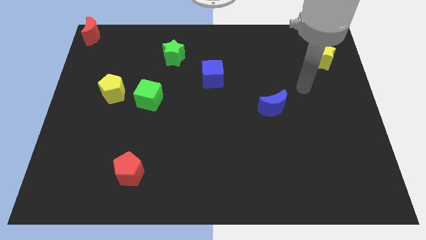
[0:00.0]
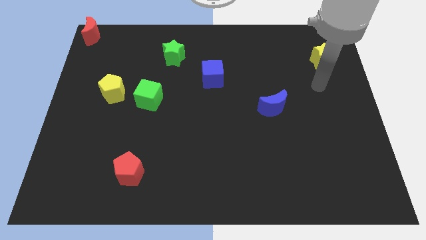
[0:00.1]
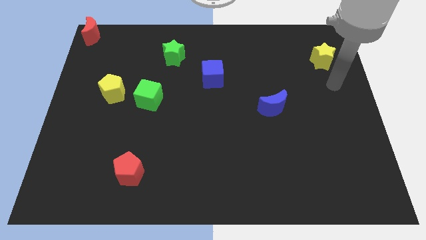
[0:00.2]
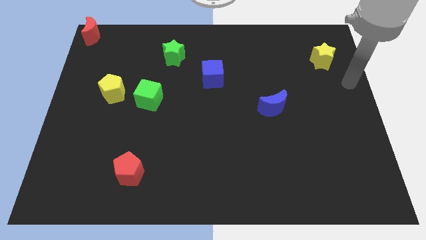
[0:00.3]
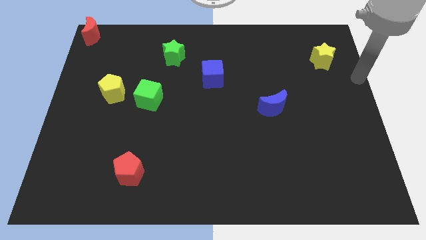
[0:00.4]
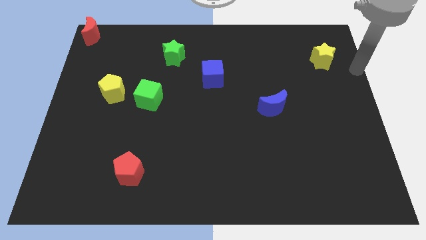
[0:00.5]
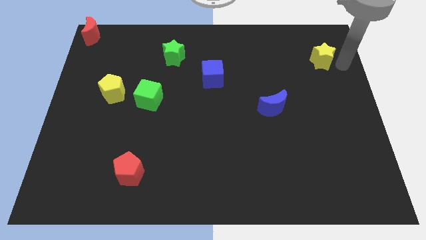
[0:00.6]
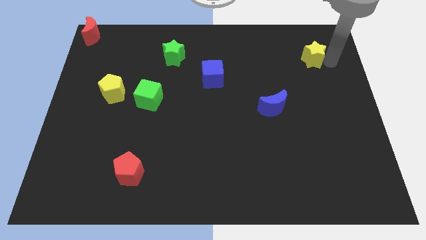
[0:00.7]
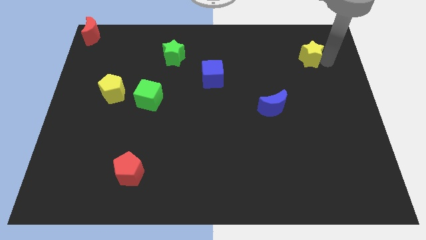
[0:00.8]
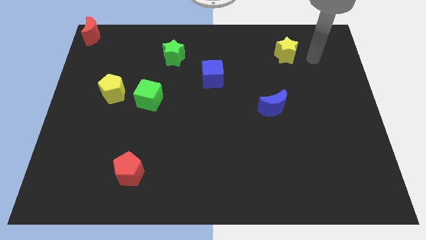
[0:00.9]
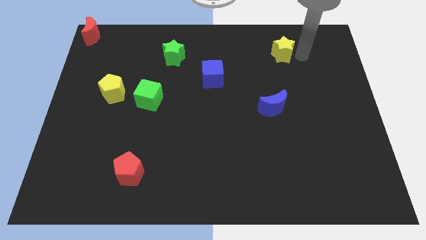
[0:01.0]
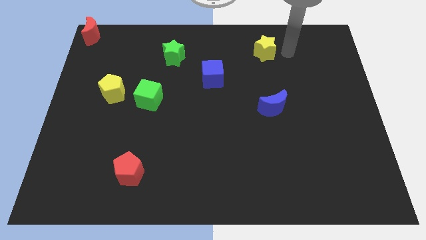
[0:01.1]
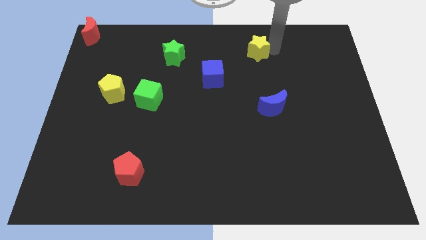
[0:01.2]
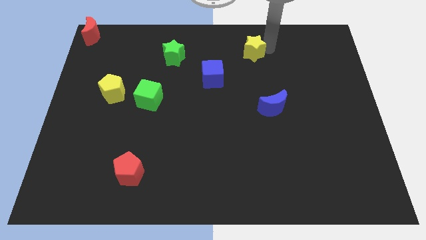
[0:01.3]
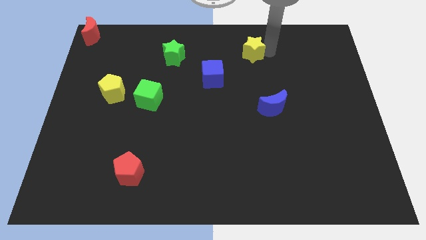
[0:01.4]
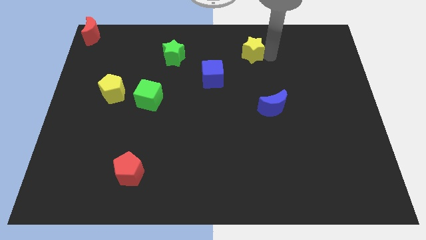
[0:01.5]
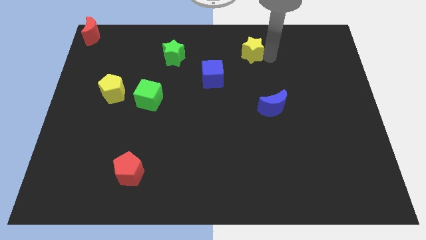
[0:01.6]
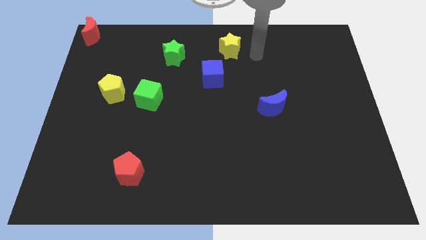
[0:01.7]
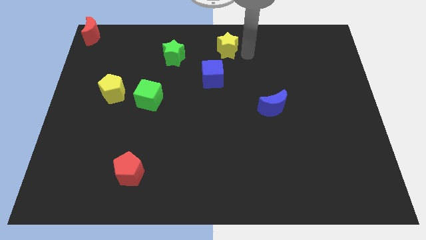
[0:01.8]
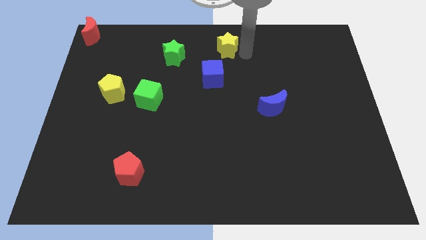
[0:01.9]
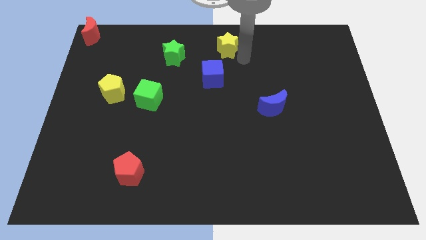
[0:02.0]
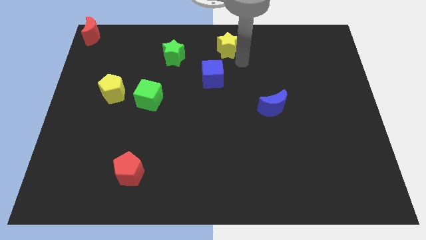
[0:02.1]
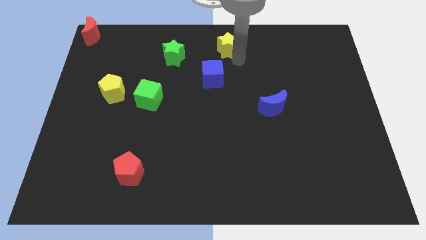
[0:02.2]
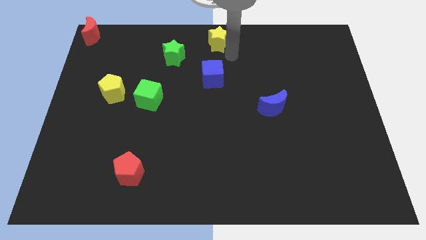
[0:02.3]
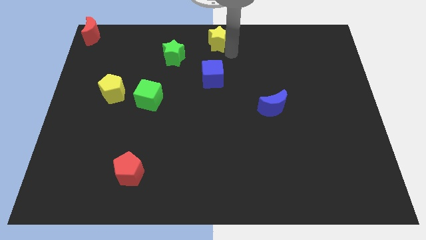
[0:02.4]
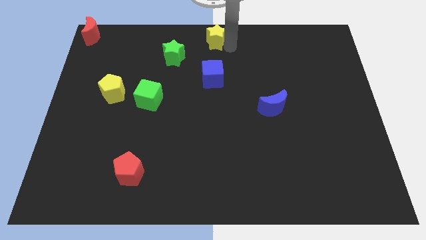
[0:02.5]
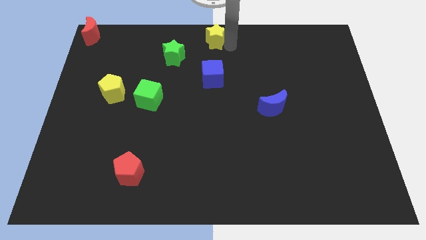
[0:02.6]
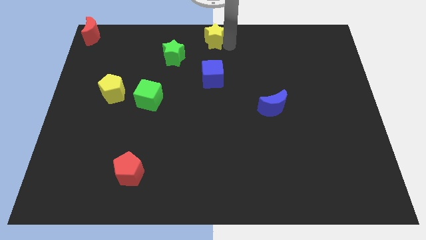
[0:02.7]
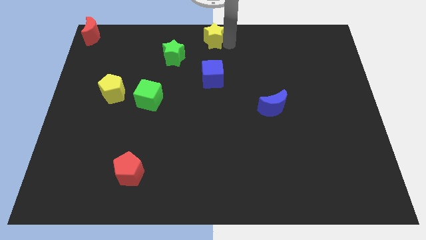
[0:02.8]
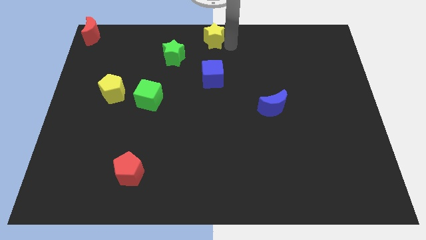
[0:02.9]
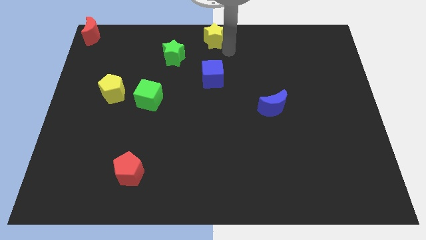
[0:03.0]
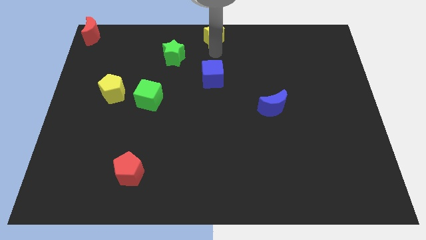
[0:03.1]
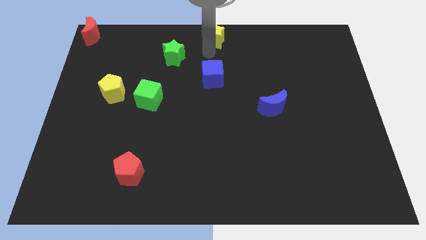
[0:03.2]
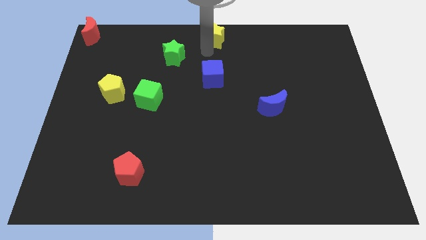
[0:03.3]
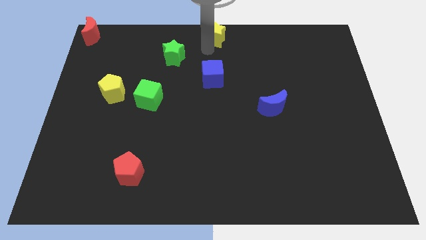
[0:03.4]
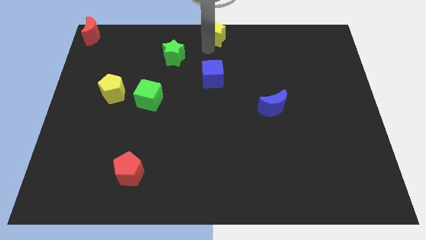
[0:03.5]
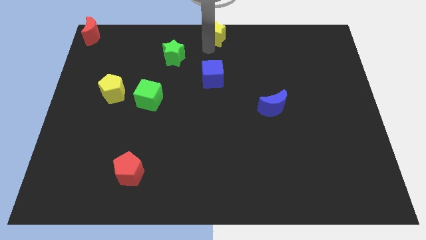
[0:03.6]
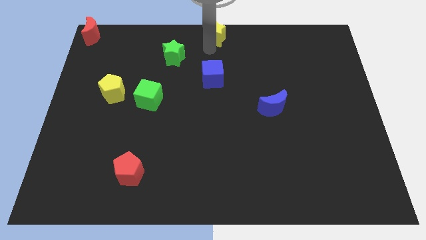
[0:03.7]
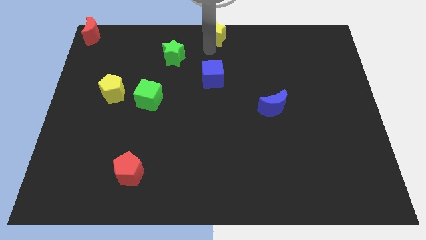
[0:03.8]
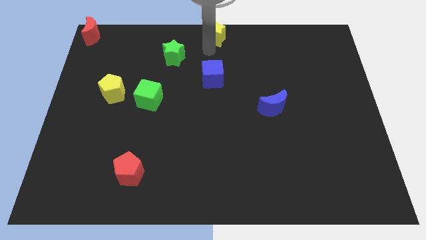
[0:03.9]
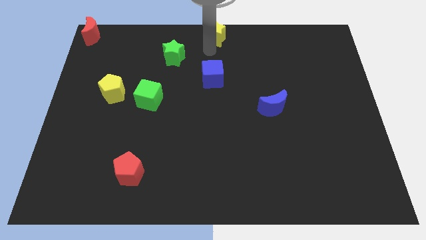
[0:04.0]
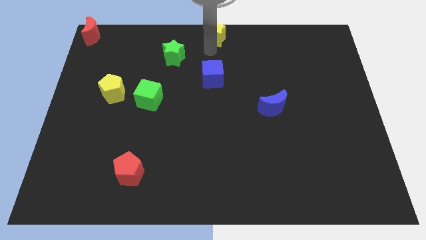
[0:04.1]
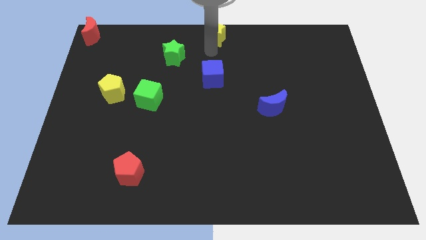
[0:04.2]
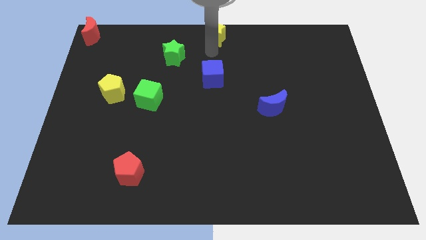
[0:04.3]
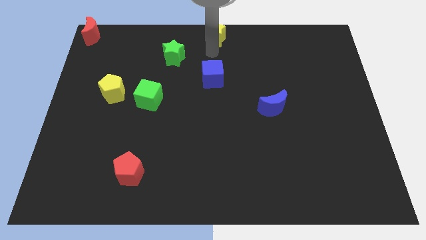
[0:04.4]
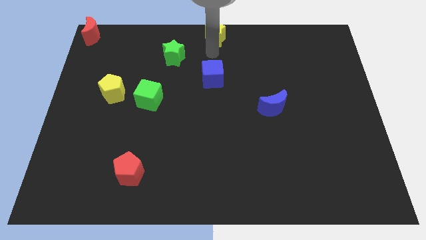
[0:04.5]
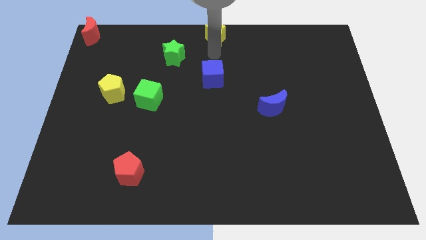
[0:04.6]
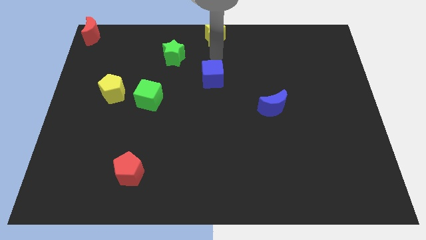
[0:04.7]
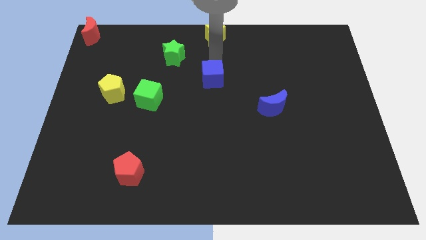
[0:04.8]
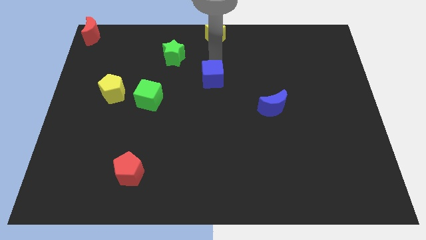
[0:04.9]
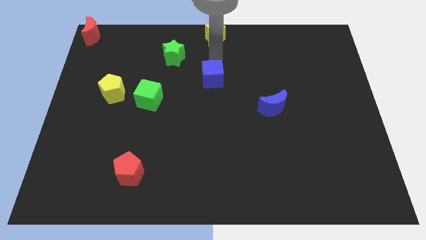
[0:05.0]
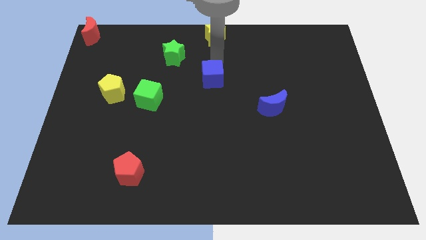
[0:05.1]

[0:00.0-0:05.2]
push the yellow star to the top center of the board

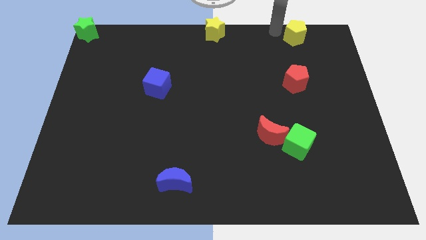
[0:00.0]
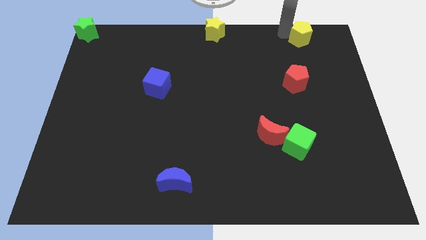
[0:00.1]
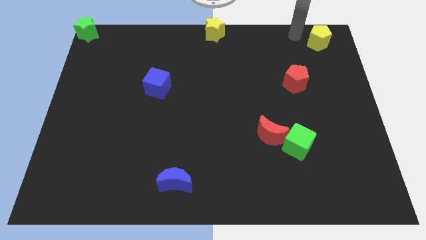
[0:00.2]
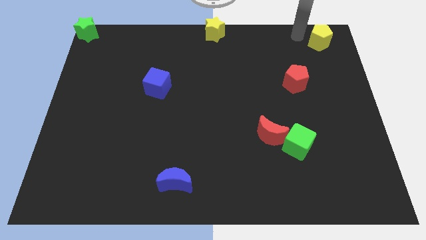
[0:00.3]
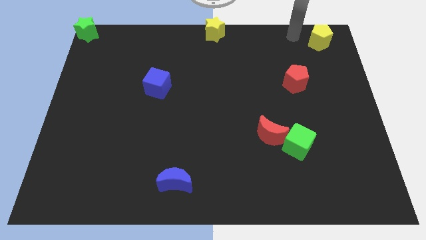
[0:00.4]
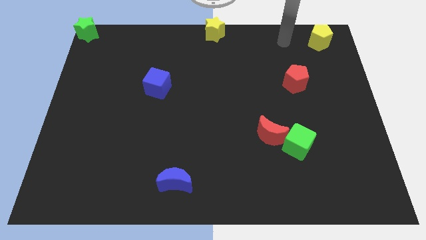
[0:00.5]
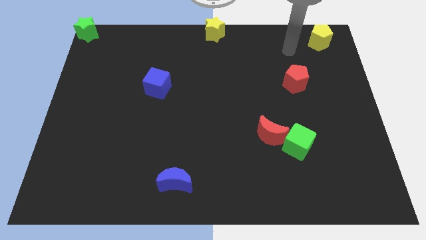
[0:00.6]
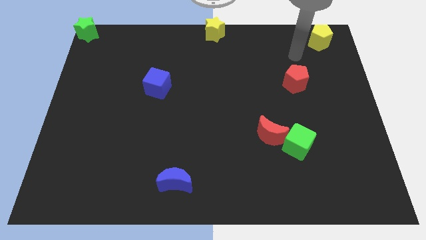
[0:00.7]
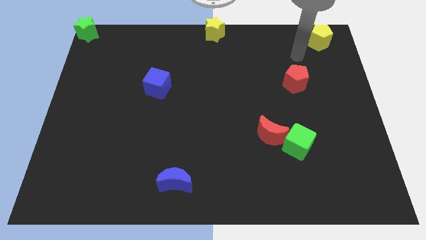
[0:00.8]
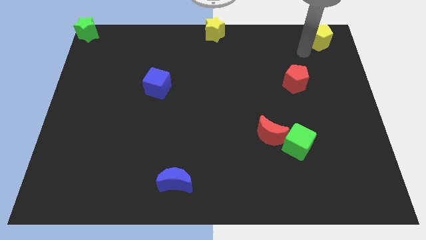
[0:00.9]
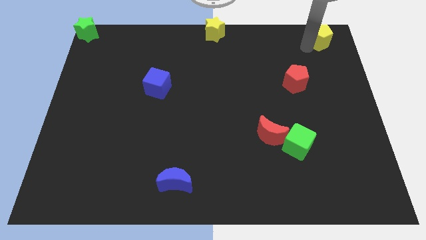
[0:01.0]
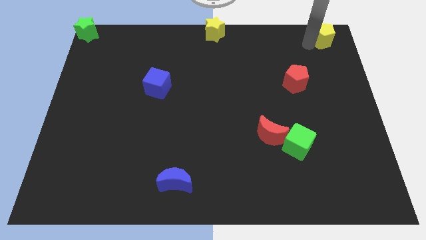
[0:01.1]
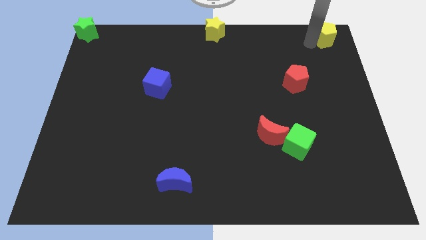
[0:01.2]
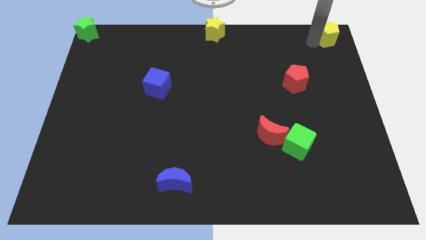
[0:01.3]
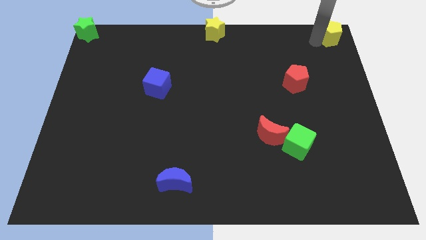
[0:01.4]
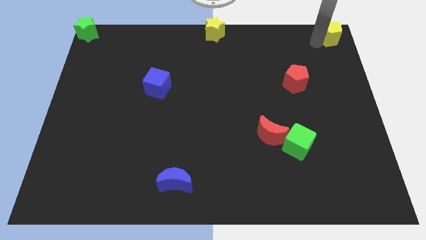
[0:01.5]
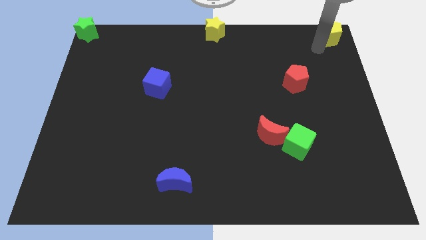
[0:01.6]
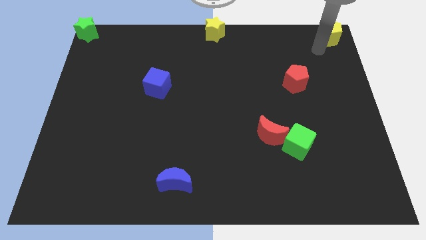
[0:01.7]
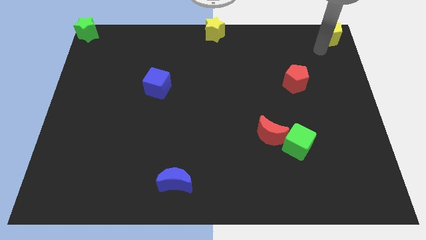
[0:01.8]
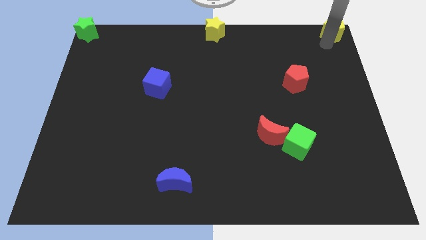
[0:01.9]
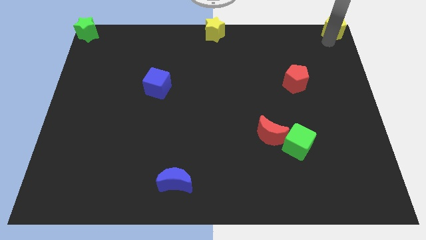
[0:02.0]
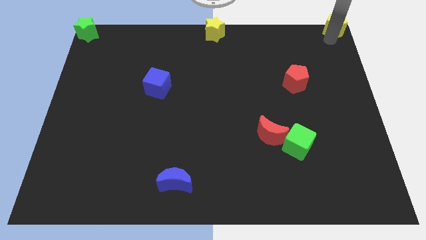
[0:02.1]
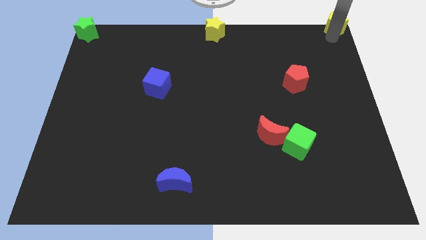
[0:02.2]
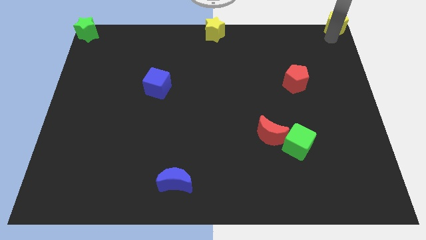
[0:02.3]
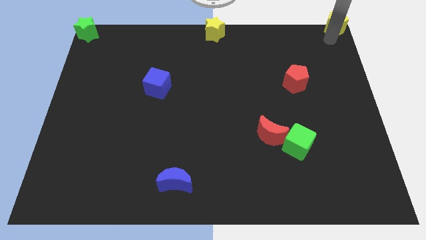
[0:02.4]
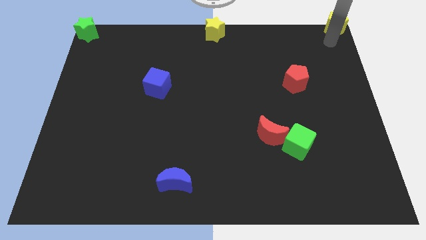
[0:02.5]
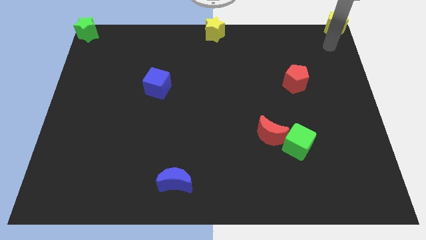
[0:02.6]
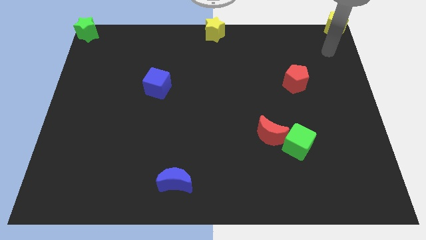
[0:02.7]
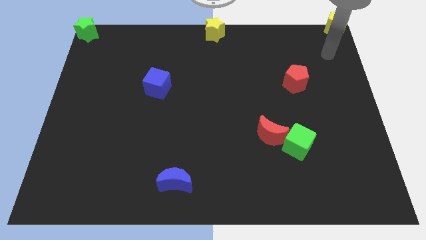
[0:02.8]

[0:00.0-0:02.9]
put the yellow pentagon to the top right corner

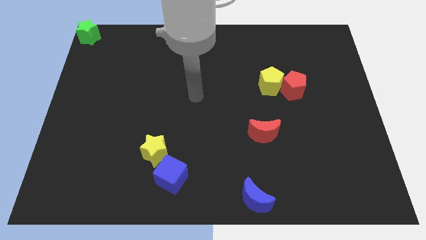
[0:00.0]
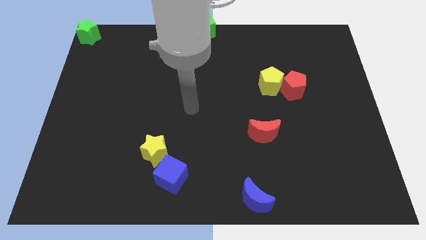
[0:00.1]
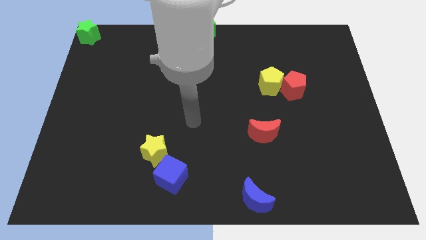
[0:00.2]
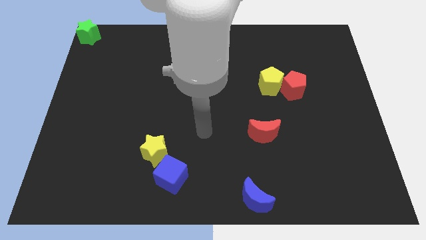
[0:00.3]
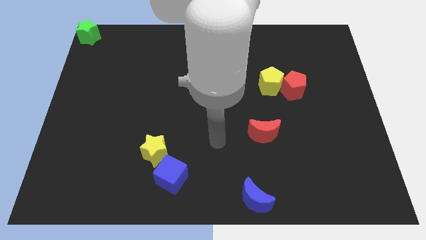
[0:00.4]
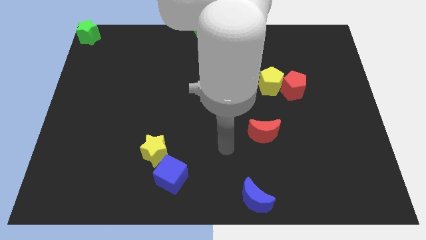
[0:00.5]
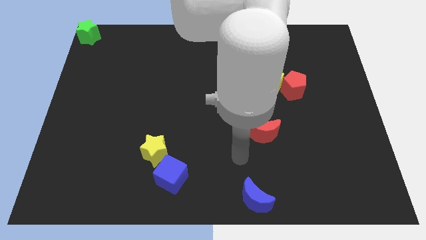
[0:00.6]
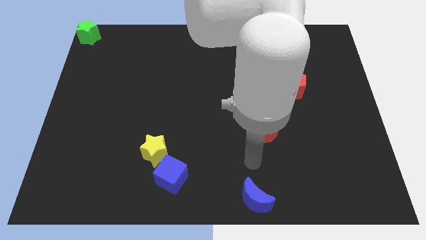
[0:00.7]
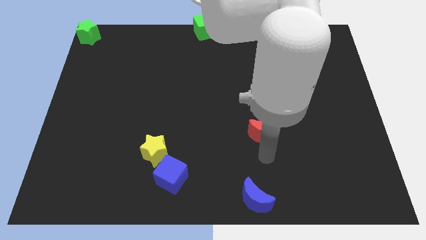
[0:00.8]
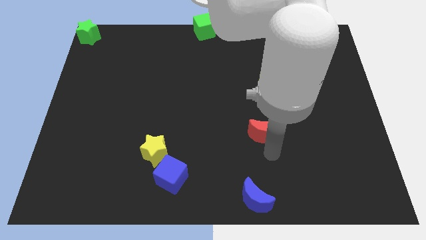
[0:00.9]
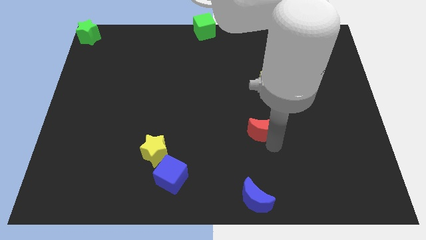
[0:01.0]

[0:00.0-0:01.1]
tab the bottom side of the red moon
